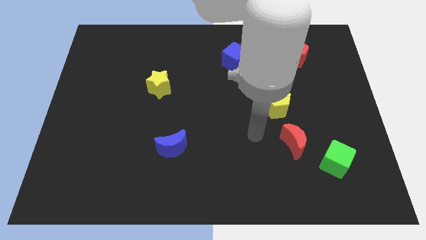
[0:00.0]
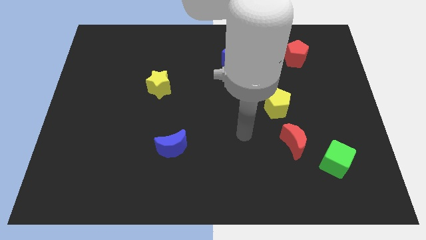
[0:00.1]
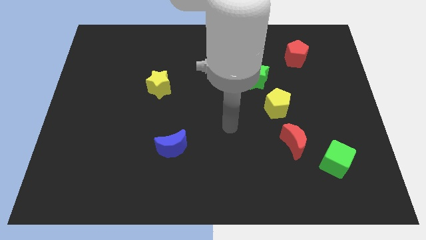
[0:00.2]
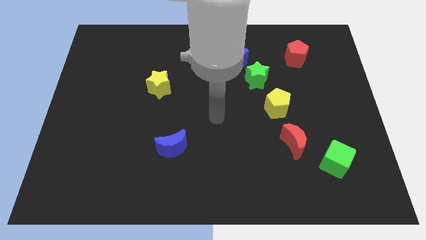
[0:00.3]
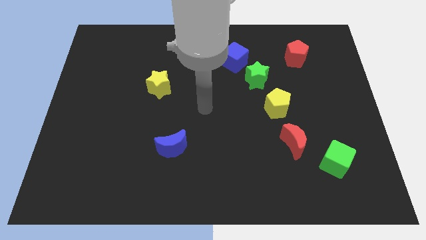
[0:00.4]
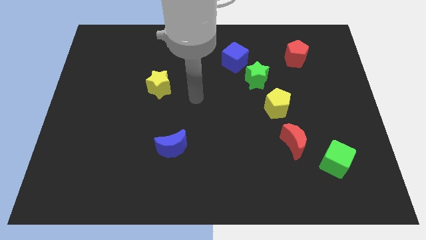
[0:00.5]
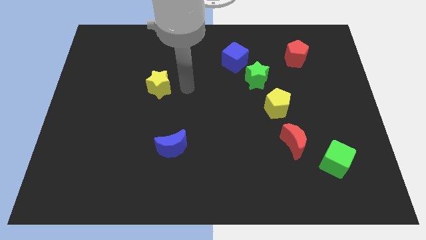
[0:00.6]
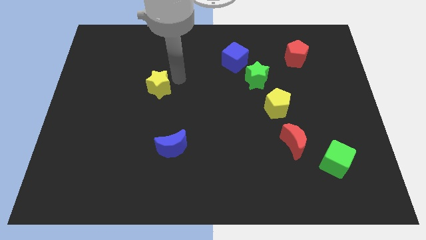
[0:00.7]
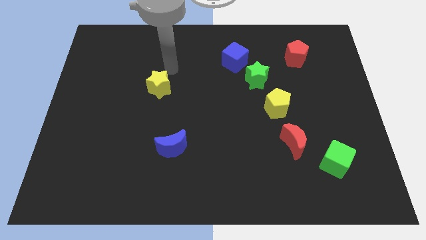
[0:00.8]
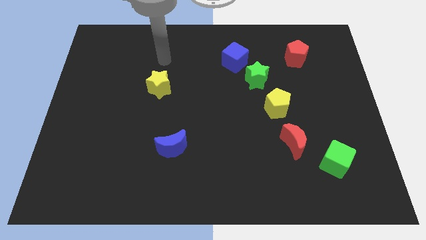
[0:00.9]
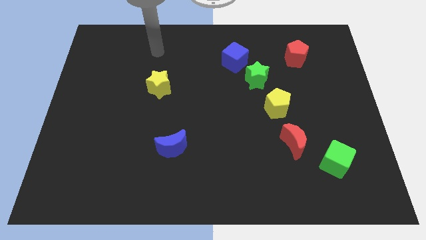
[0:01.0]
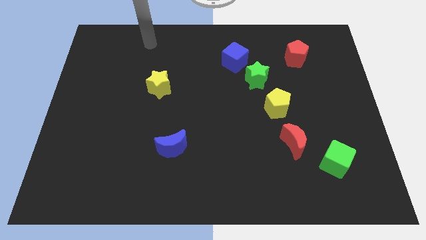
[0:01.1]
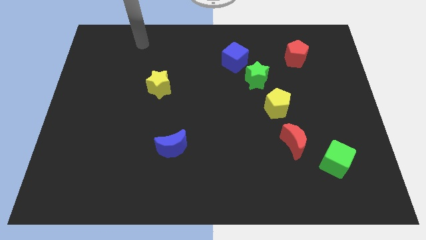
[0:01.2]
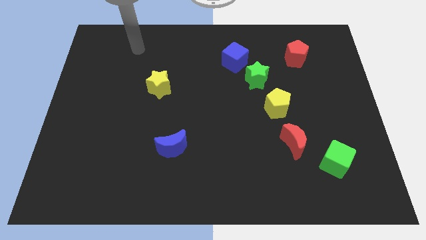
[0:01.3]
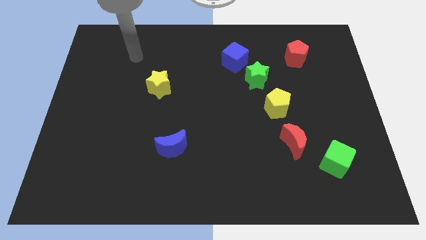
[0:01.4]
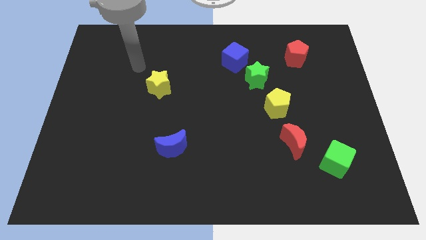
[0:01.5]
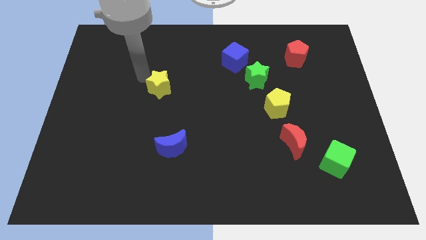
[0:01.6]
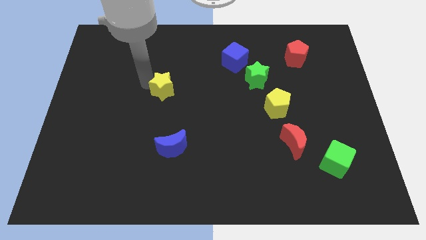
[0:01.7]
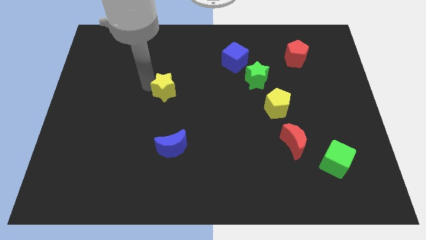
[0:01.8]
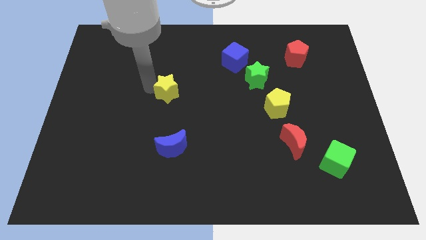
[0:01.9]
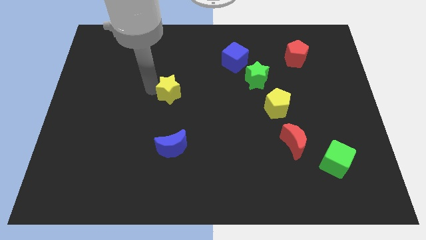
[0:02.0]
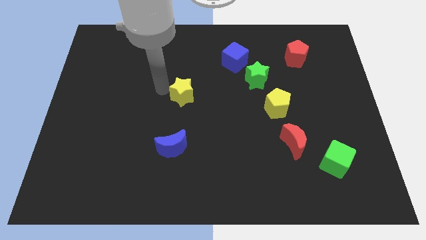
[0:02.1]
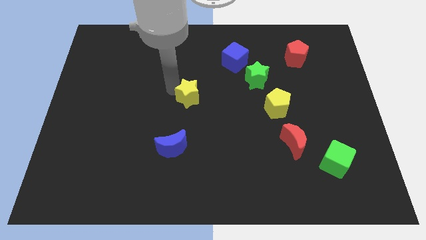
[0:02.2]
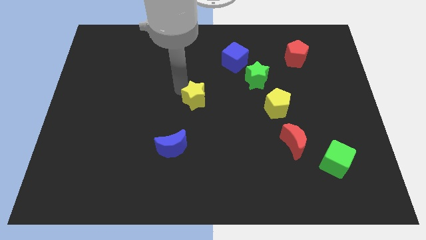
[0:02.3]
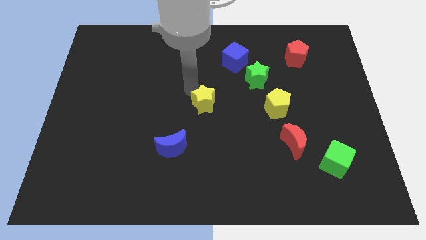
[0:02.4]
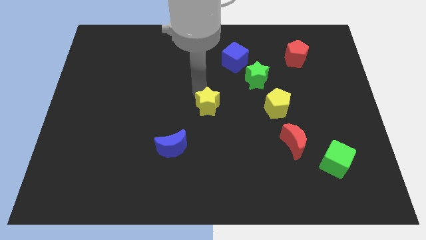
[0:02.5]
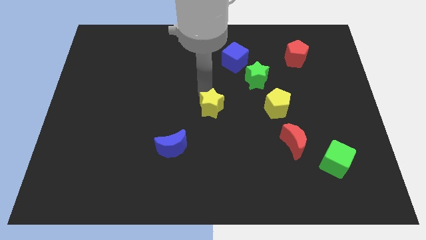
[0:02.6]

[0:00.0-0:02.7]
place the yellow star parallel to yellow pentagon

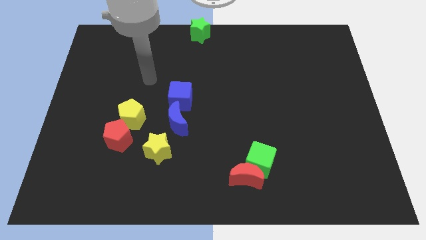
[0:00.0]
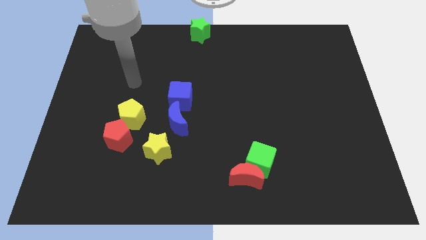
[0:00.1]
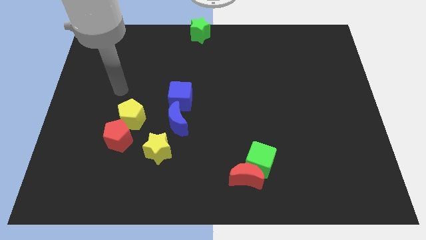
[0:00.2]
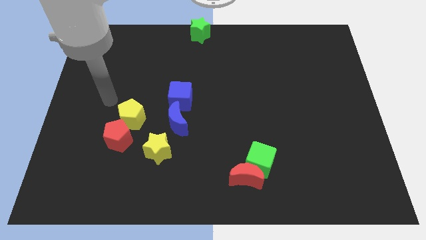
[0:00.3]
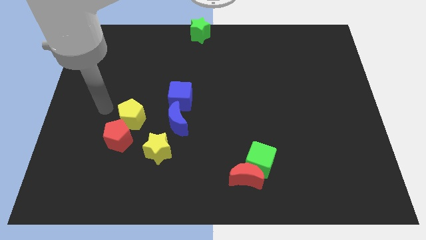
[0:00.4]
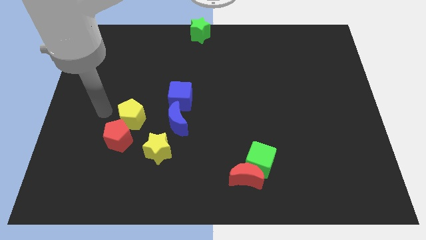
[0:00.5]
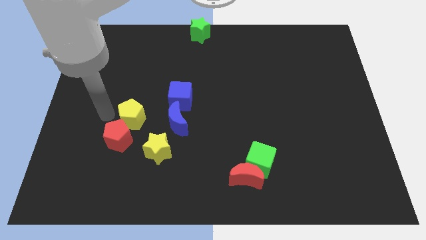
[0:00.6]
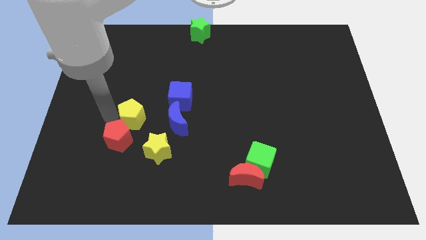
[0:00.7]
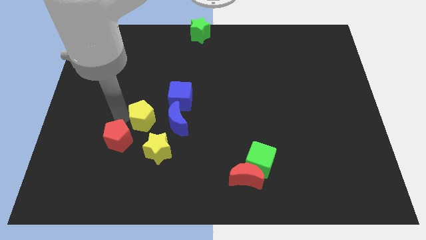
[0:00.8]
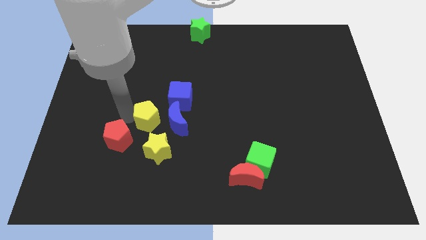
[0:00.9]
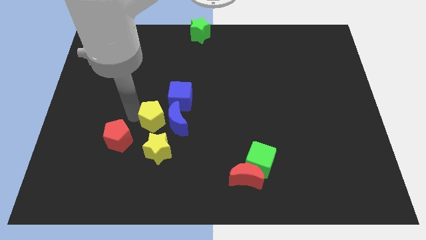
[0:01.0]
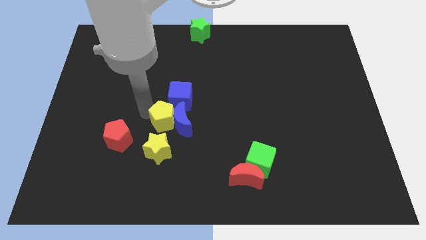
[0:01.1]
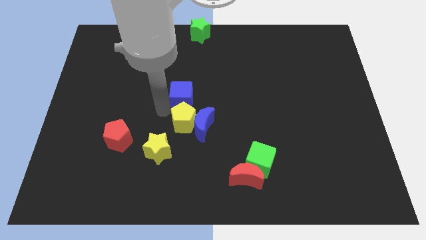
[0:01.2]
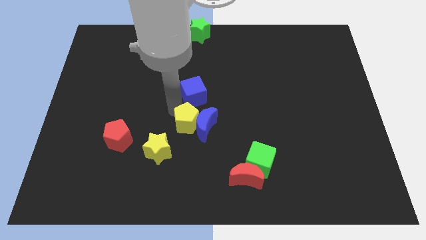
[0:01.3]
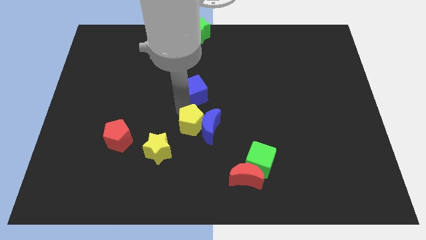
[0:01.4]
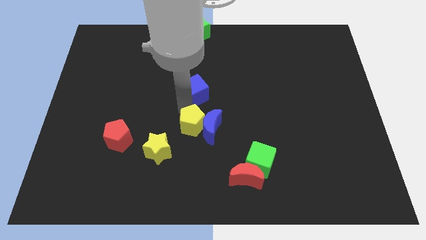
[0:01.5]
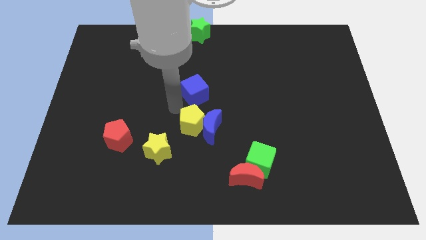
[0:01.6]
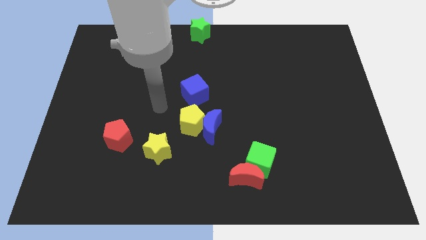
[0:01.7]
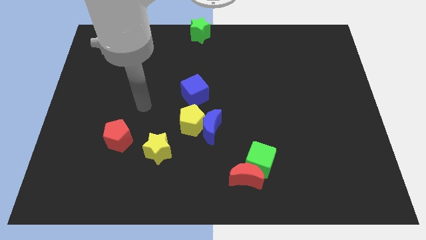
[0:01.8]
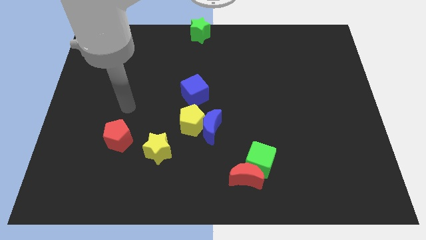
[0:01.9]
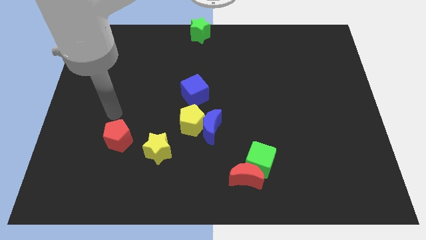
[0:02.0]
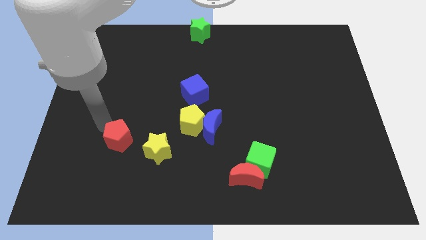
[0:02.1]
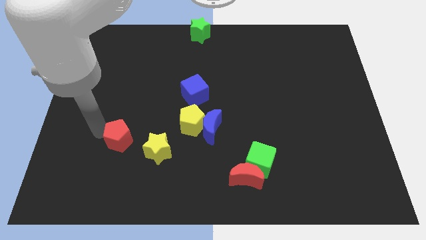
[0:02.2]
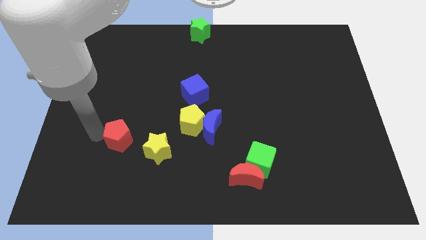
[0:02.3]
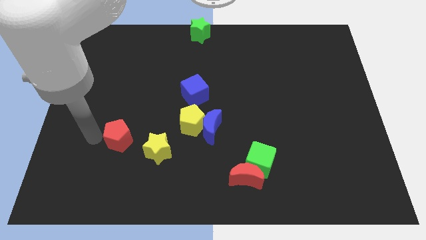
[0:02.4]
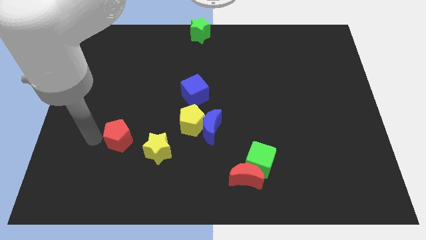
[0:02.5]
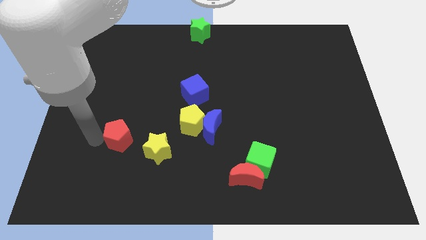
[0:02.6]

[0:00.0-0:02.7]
push the yellow pentagon into the blue moon

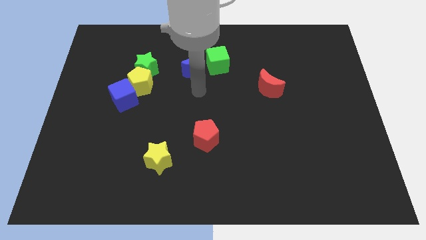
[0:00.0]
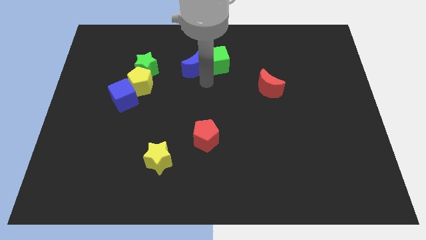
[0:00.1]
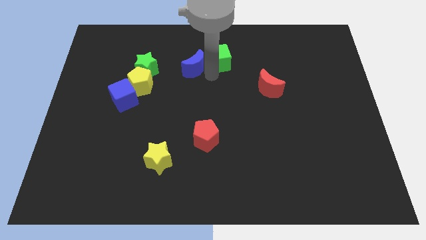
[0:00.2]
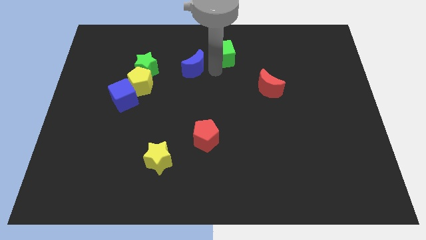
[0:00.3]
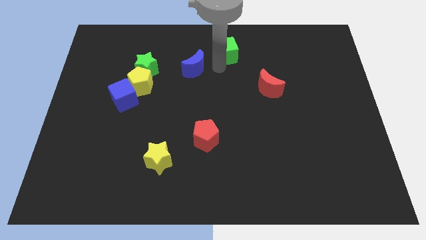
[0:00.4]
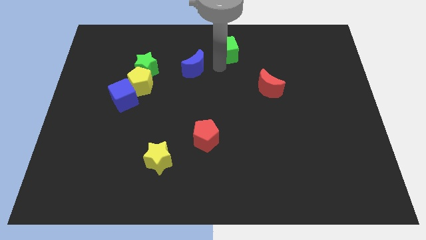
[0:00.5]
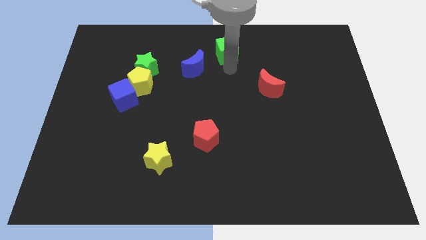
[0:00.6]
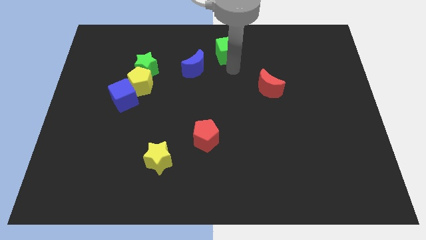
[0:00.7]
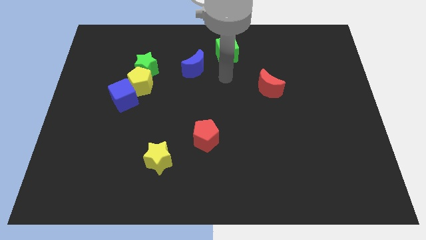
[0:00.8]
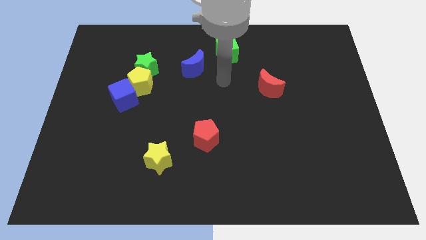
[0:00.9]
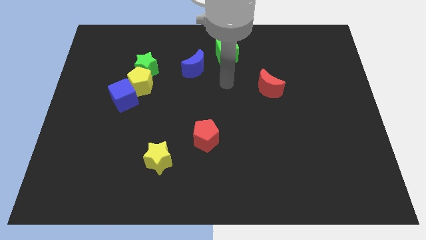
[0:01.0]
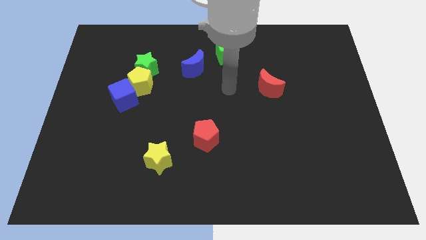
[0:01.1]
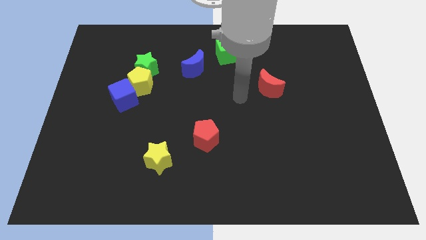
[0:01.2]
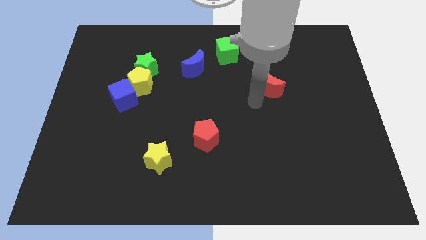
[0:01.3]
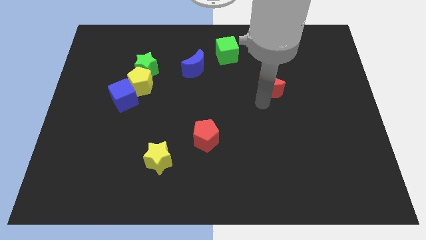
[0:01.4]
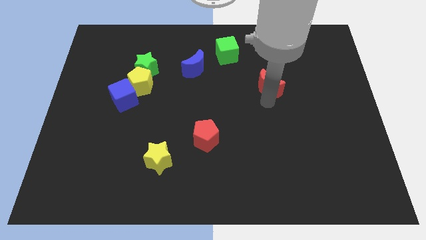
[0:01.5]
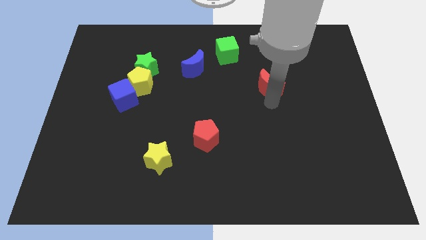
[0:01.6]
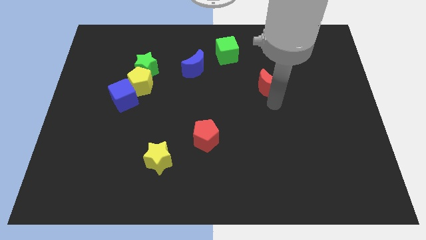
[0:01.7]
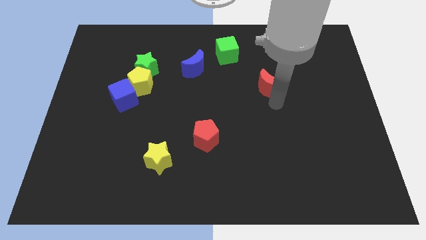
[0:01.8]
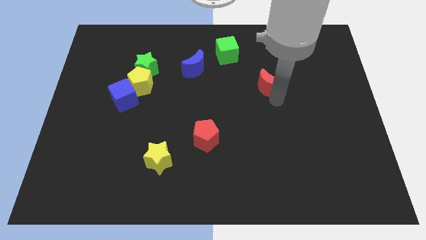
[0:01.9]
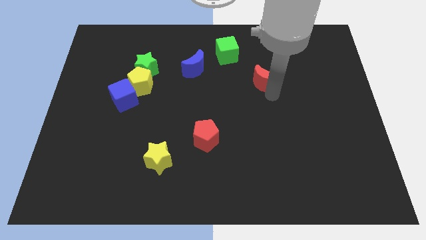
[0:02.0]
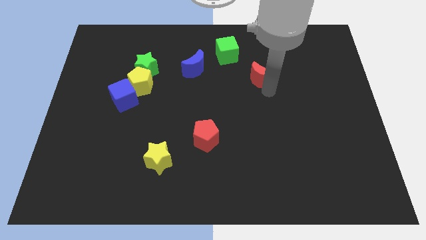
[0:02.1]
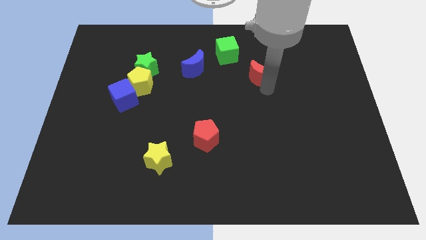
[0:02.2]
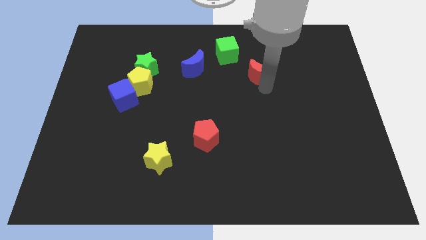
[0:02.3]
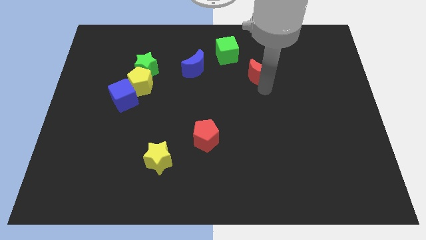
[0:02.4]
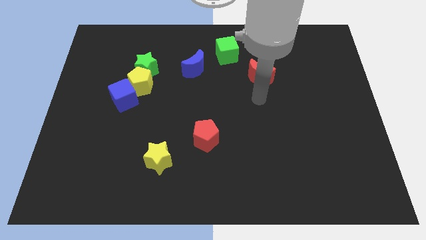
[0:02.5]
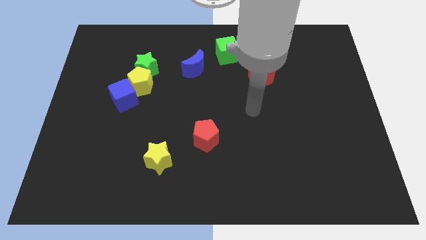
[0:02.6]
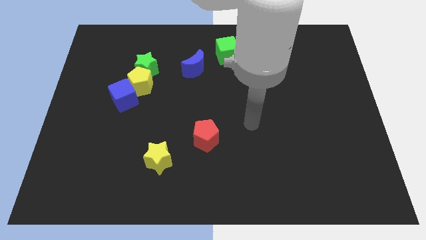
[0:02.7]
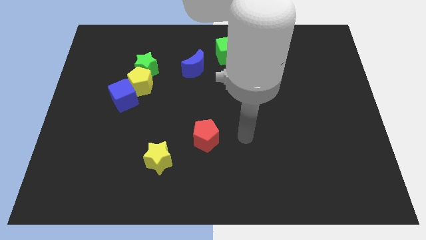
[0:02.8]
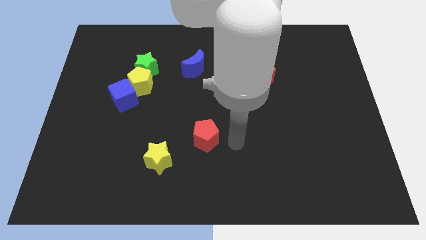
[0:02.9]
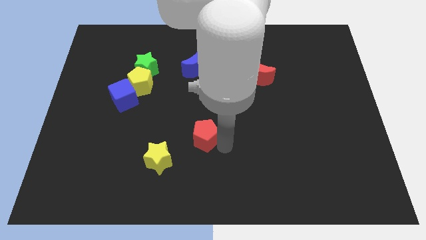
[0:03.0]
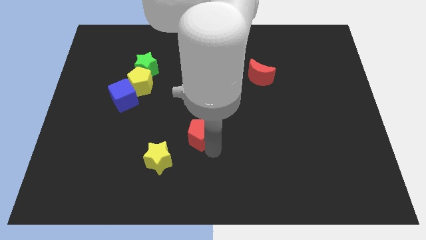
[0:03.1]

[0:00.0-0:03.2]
slide green cube and the red moon close to each other

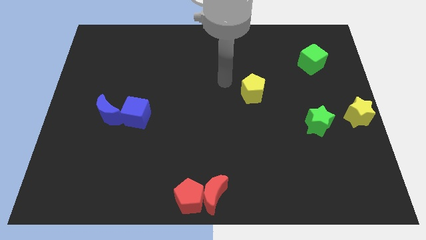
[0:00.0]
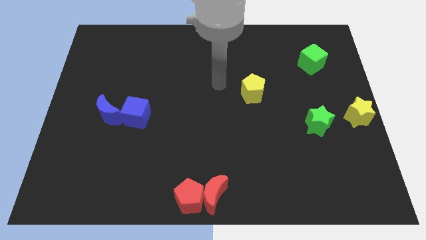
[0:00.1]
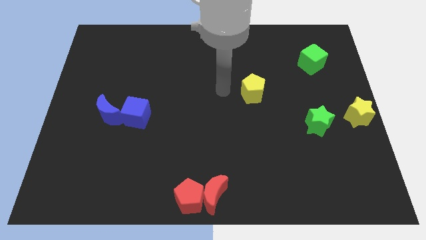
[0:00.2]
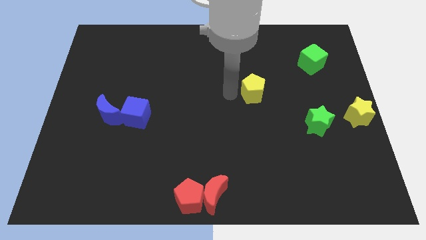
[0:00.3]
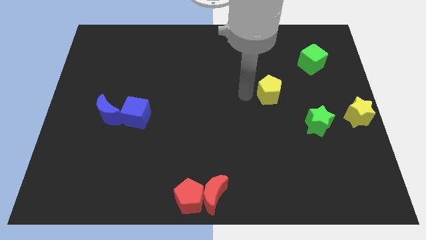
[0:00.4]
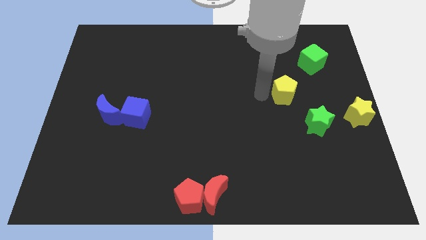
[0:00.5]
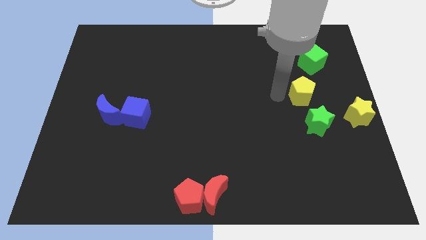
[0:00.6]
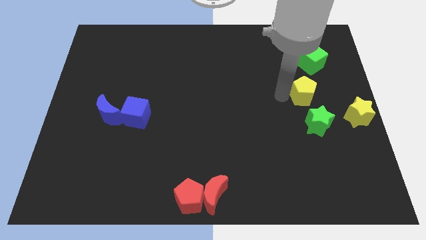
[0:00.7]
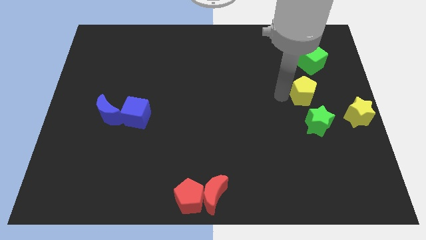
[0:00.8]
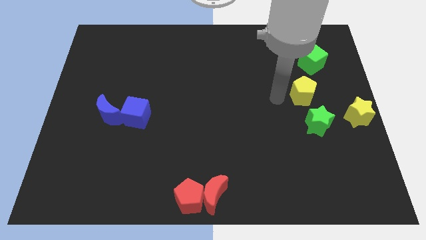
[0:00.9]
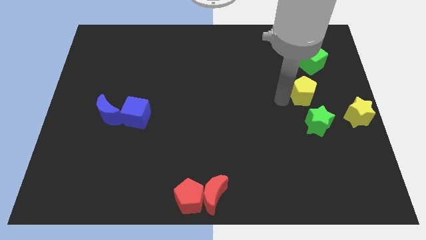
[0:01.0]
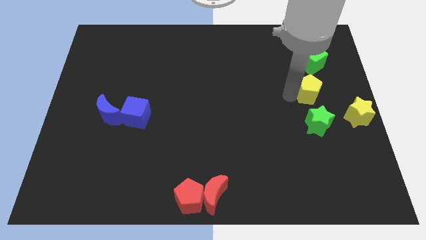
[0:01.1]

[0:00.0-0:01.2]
place the yellow pentagon in between the green cube and green star
